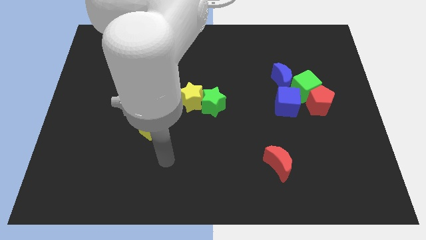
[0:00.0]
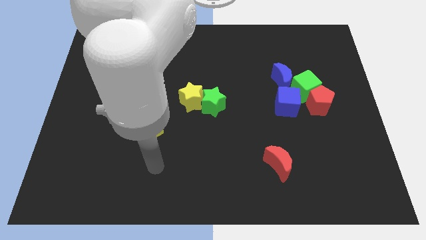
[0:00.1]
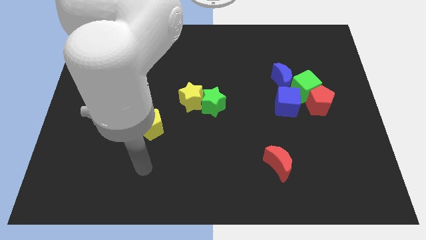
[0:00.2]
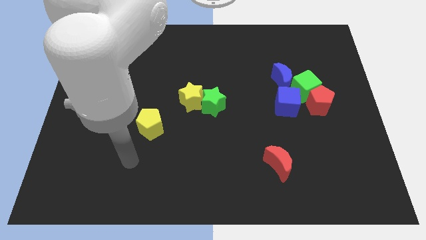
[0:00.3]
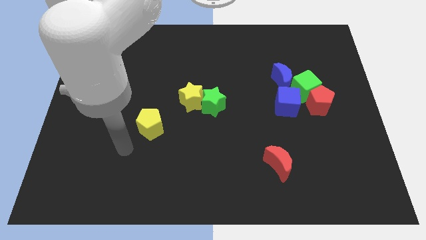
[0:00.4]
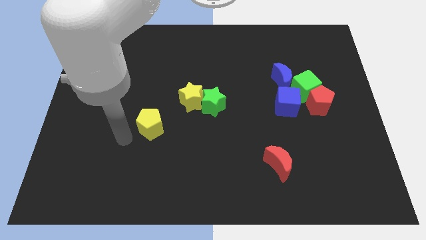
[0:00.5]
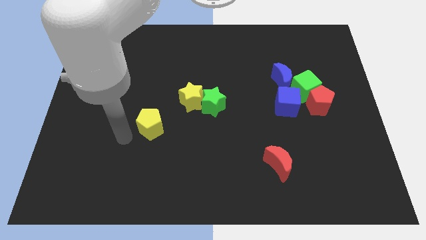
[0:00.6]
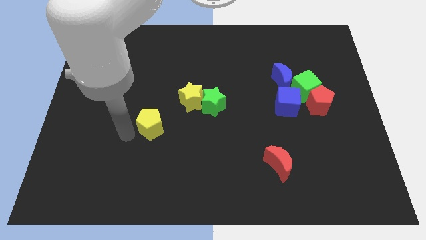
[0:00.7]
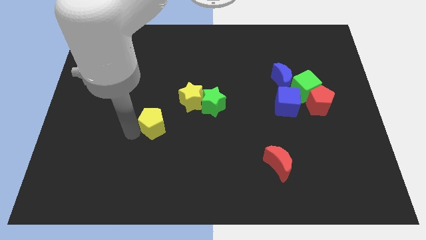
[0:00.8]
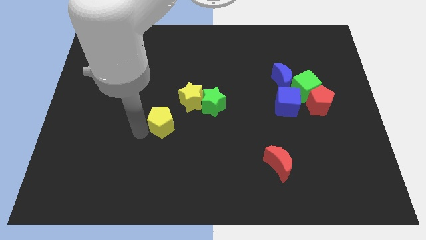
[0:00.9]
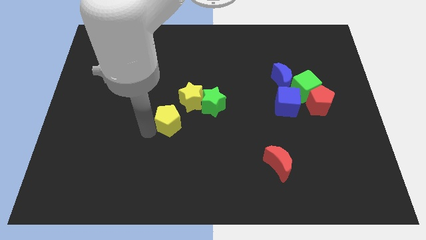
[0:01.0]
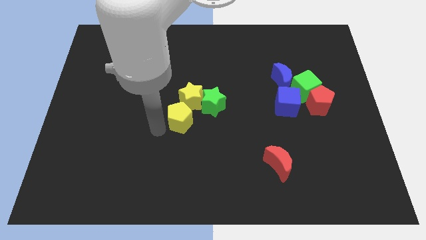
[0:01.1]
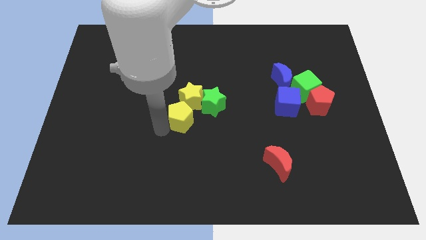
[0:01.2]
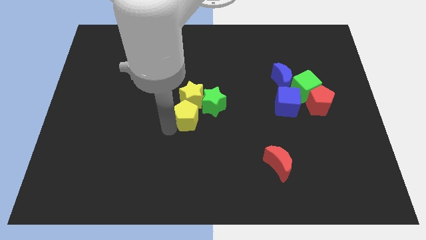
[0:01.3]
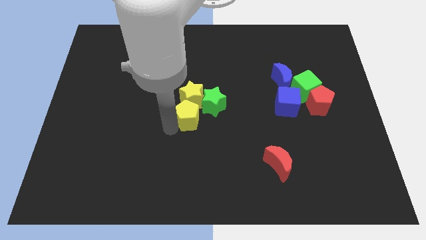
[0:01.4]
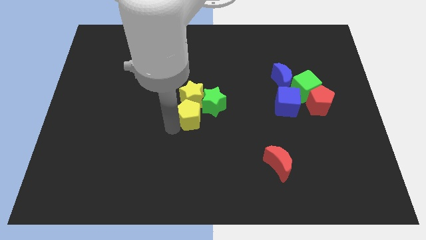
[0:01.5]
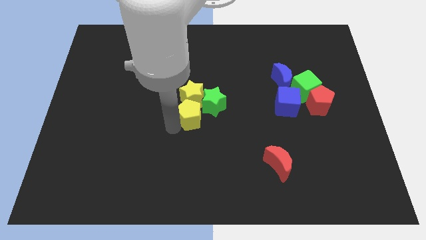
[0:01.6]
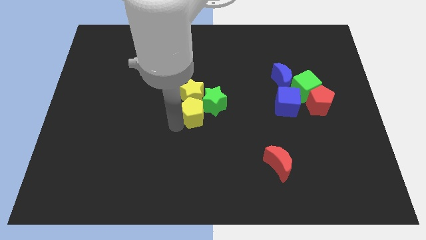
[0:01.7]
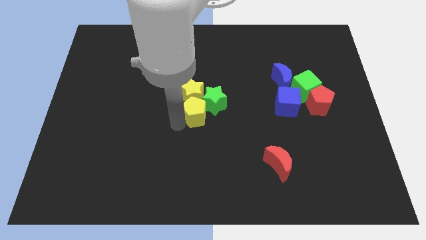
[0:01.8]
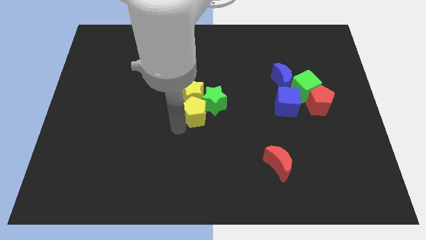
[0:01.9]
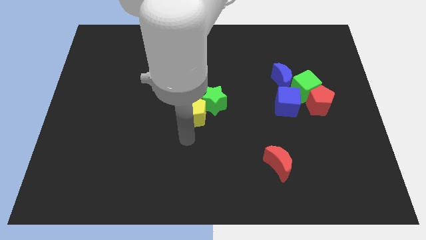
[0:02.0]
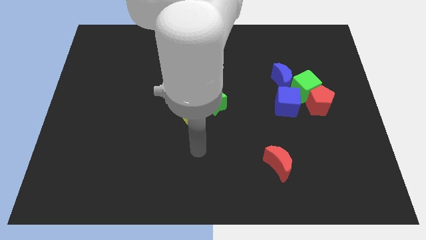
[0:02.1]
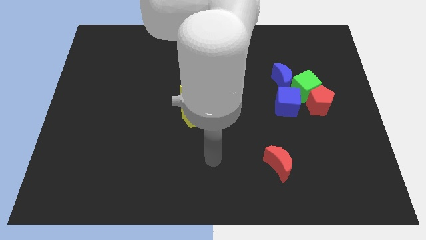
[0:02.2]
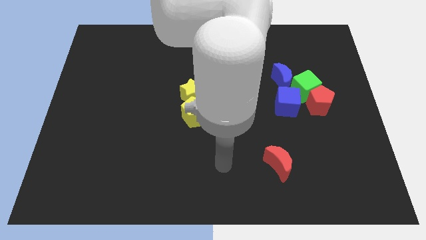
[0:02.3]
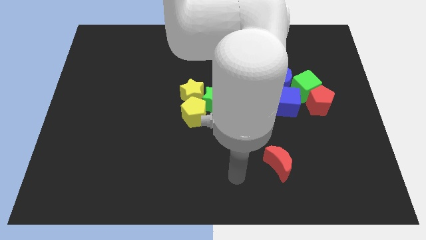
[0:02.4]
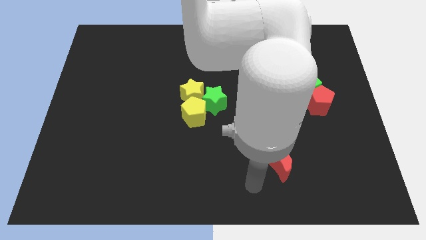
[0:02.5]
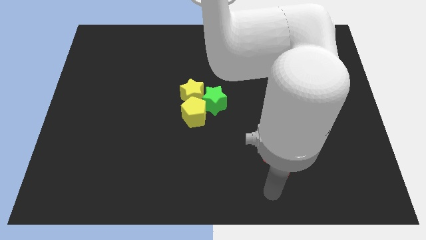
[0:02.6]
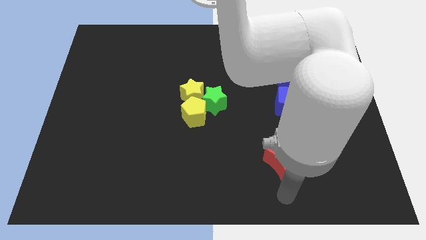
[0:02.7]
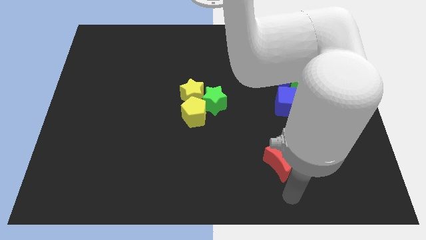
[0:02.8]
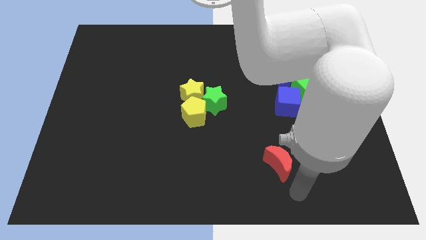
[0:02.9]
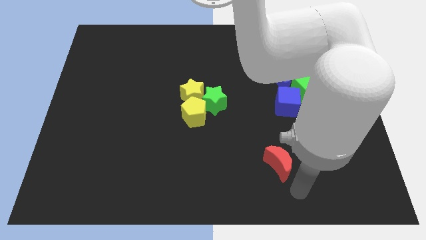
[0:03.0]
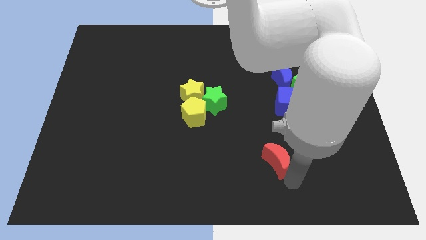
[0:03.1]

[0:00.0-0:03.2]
move the yellow pentagon to the bottom of the yellow star

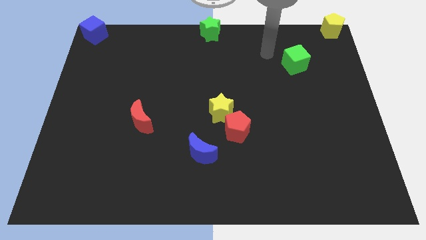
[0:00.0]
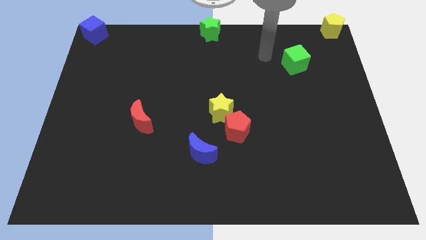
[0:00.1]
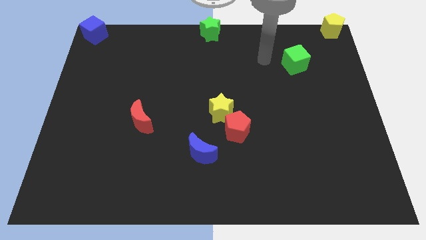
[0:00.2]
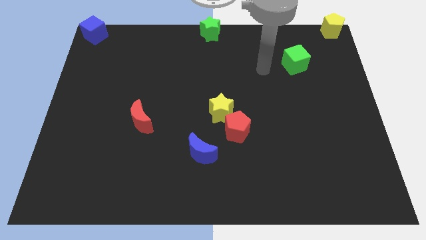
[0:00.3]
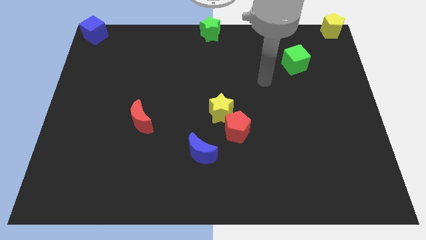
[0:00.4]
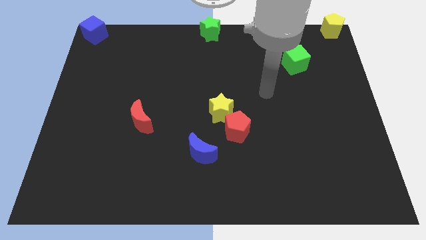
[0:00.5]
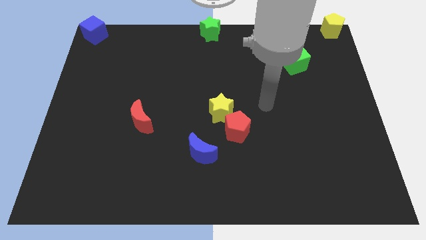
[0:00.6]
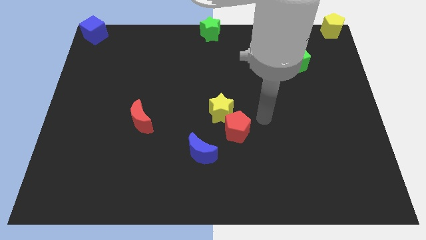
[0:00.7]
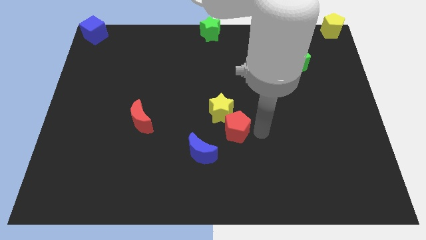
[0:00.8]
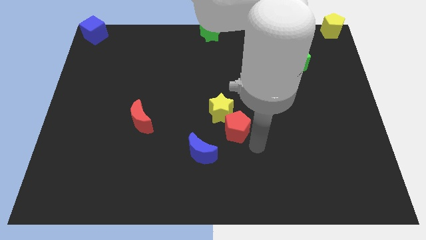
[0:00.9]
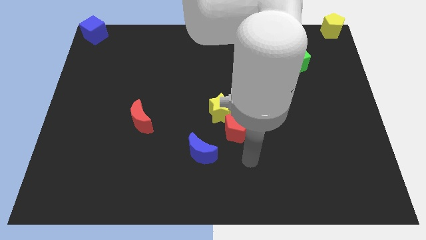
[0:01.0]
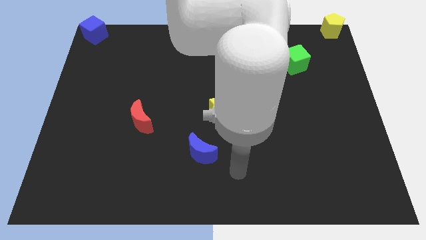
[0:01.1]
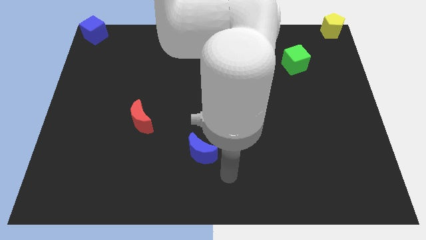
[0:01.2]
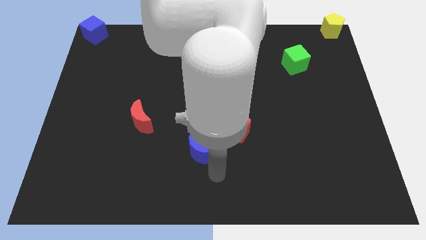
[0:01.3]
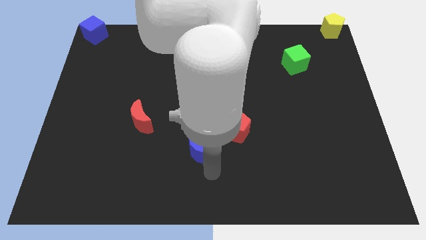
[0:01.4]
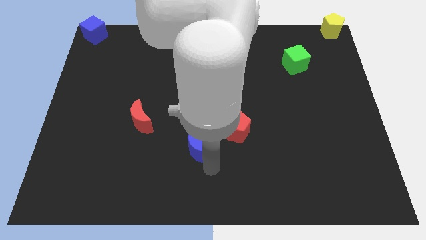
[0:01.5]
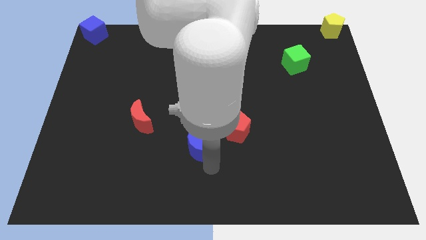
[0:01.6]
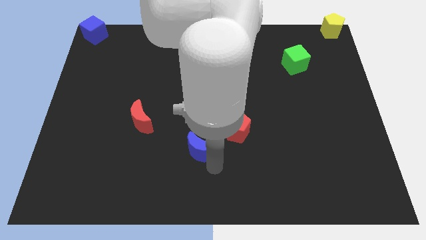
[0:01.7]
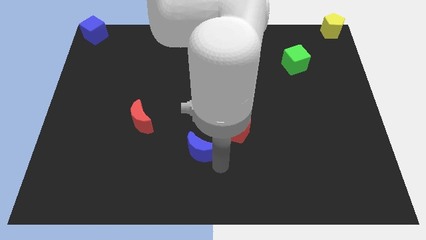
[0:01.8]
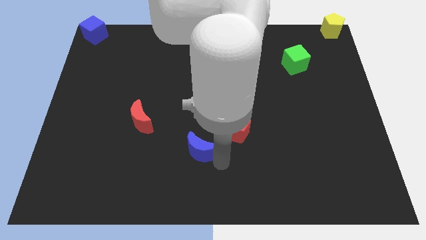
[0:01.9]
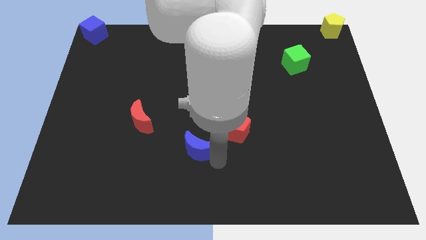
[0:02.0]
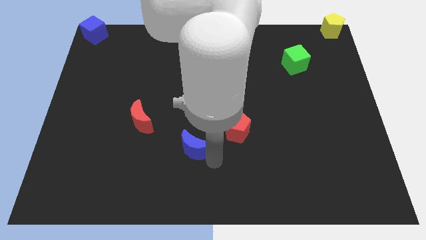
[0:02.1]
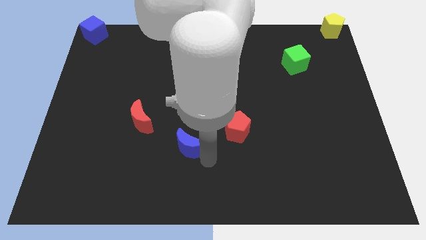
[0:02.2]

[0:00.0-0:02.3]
go near blue moon

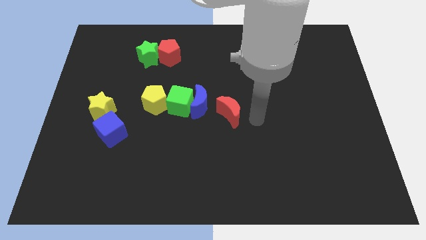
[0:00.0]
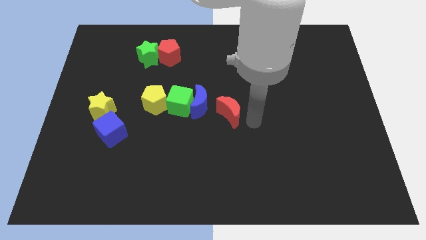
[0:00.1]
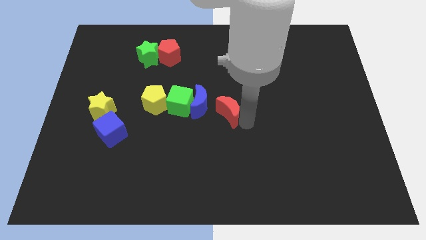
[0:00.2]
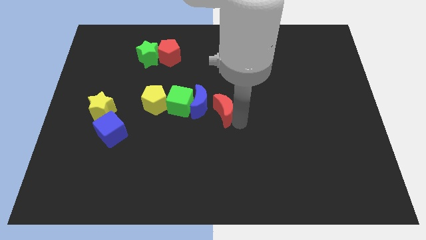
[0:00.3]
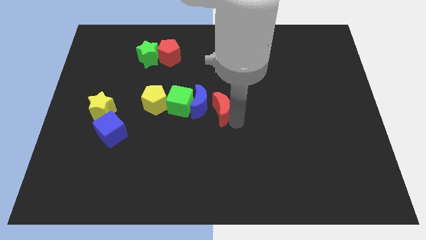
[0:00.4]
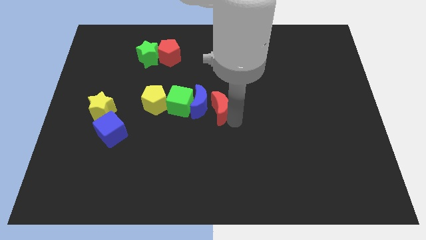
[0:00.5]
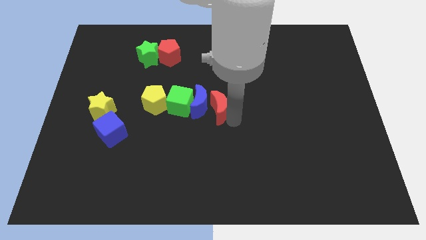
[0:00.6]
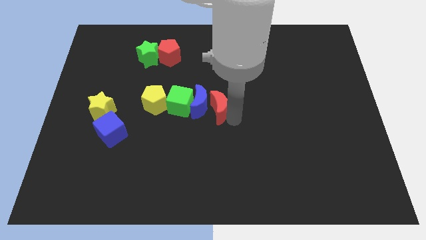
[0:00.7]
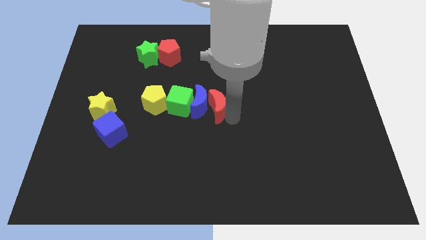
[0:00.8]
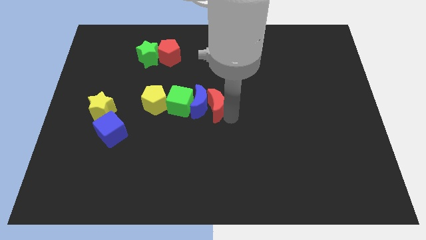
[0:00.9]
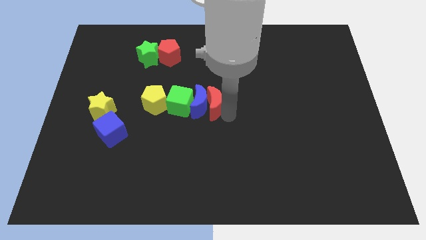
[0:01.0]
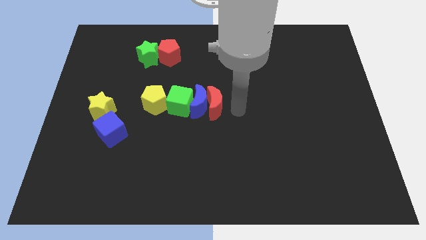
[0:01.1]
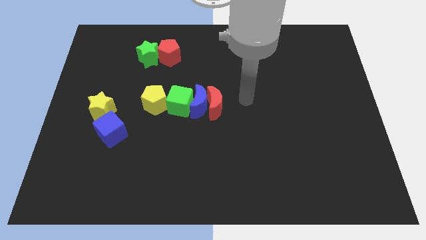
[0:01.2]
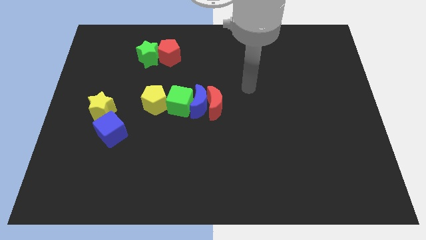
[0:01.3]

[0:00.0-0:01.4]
push the red moon right of the blue moon

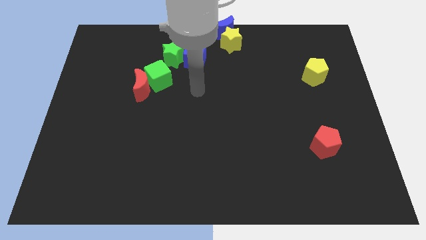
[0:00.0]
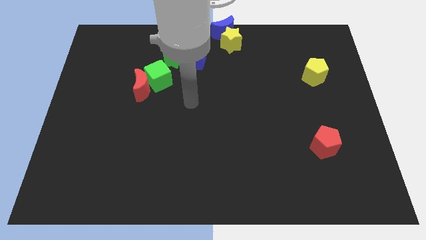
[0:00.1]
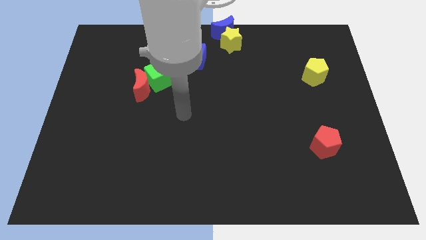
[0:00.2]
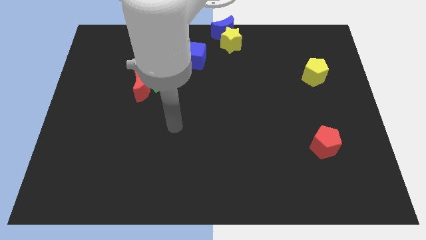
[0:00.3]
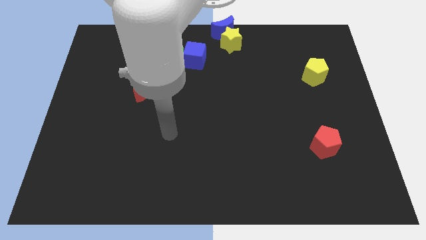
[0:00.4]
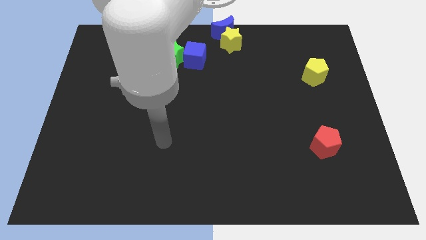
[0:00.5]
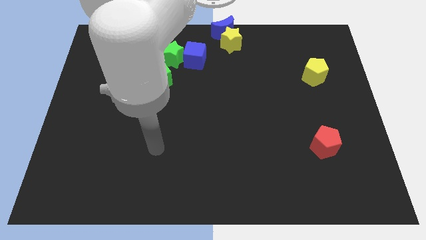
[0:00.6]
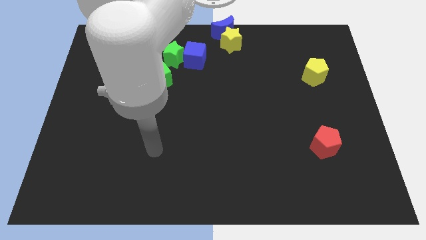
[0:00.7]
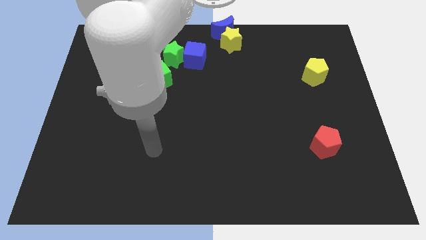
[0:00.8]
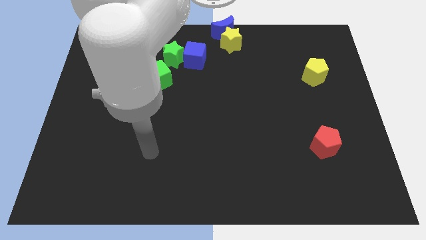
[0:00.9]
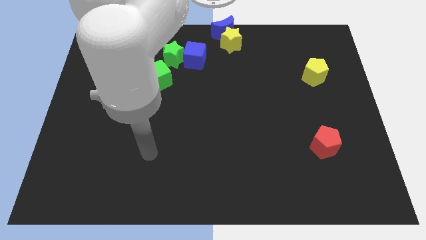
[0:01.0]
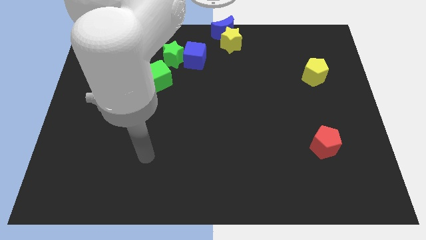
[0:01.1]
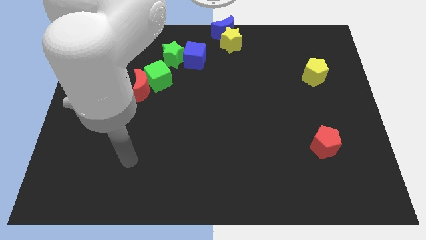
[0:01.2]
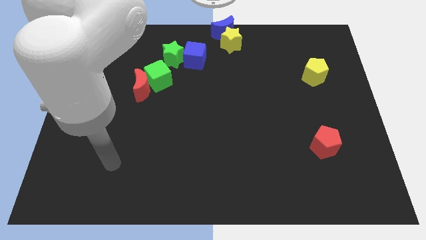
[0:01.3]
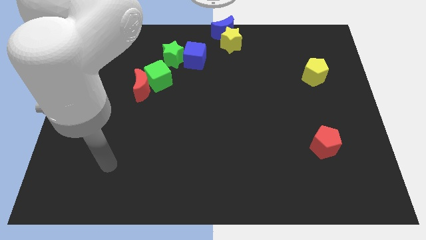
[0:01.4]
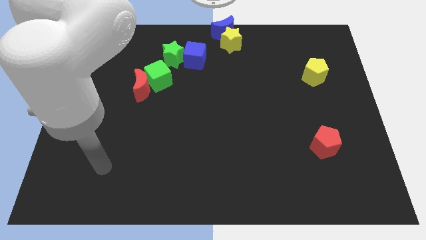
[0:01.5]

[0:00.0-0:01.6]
move away the arm from blue cube

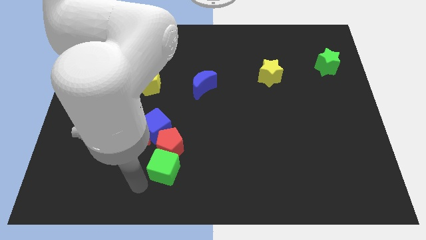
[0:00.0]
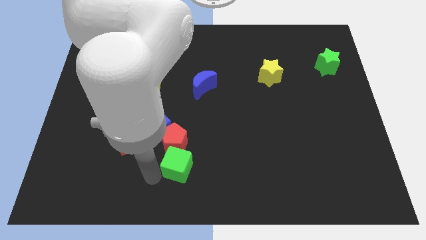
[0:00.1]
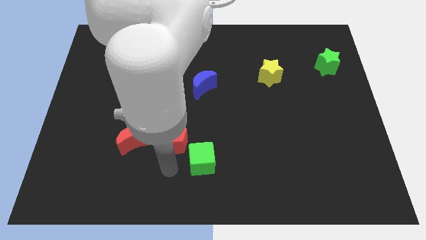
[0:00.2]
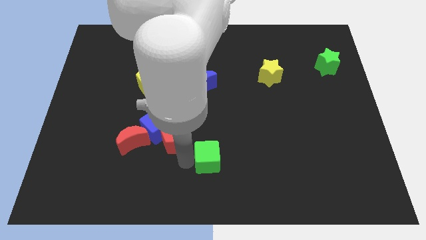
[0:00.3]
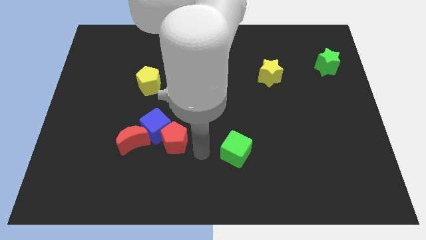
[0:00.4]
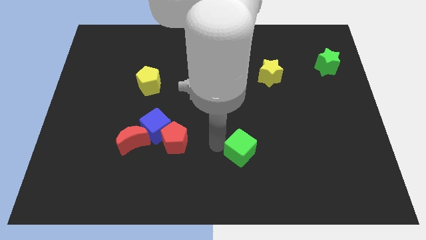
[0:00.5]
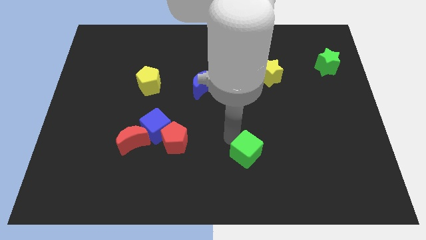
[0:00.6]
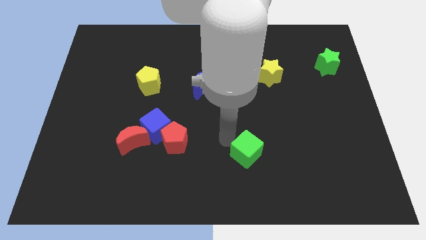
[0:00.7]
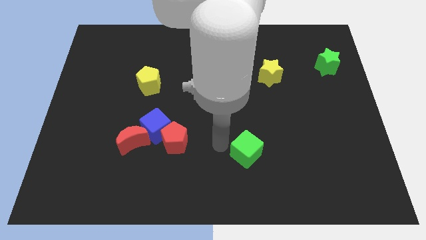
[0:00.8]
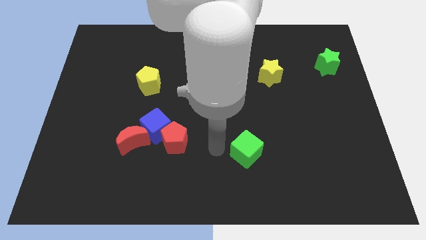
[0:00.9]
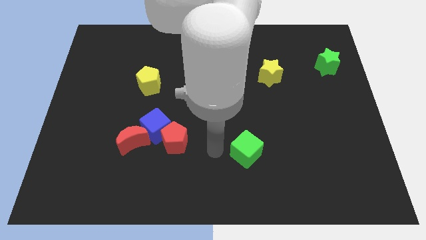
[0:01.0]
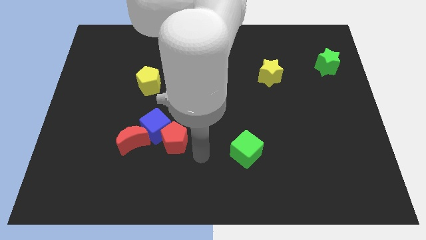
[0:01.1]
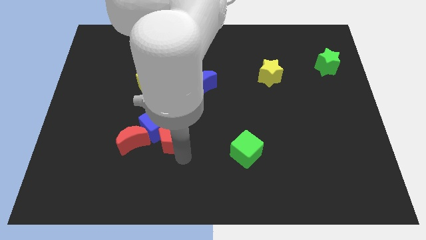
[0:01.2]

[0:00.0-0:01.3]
push the green square to the right side of the red pentagon
